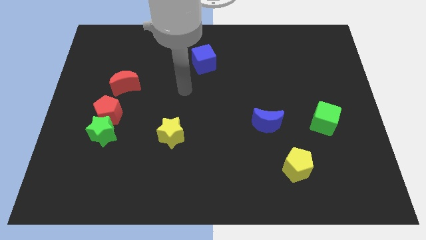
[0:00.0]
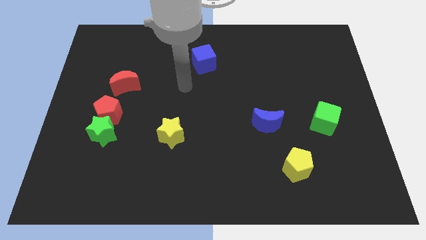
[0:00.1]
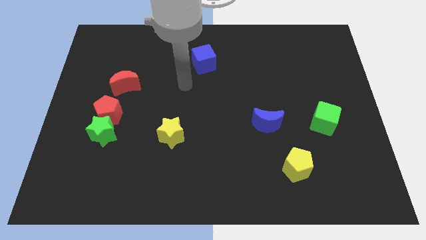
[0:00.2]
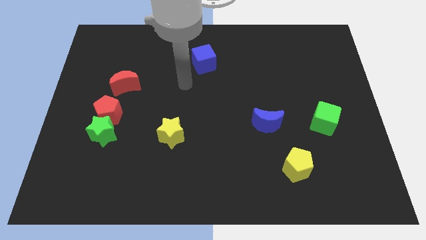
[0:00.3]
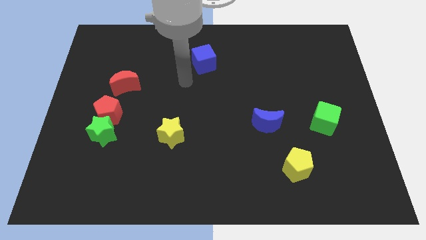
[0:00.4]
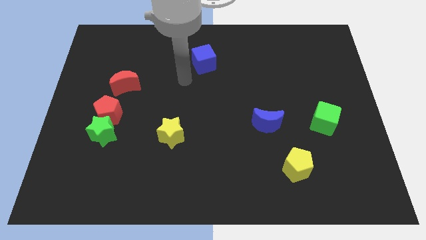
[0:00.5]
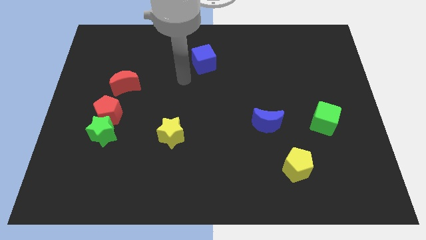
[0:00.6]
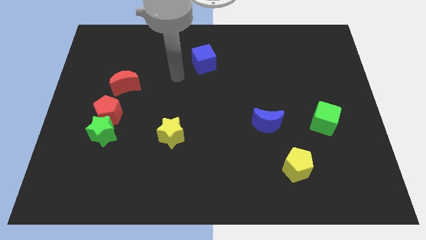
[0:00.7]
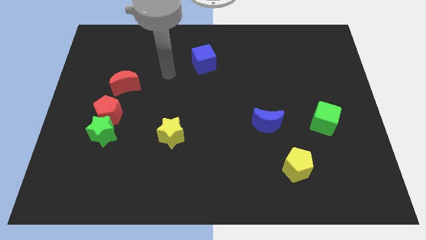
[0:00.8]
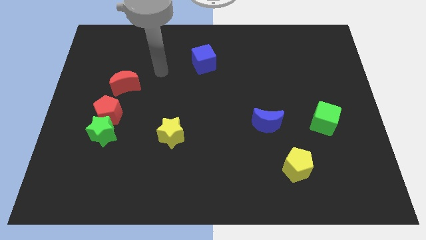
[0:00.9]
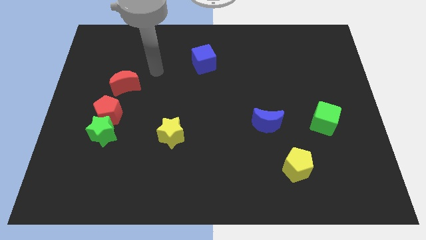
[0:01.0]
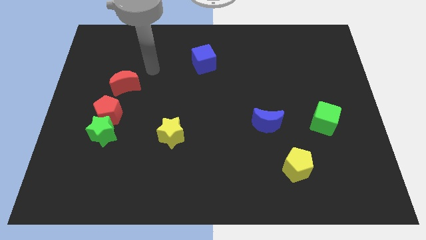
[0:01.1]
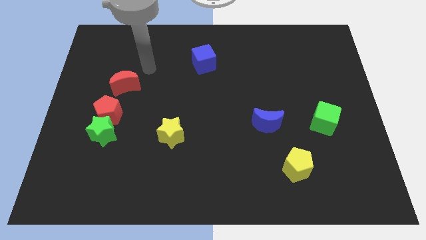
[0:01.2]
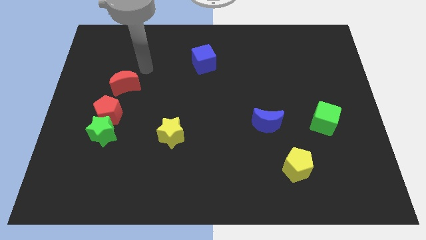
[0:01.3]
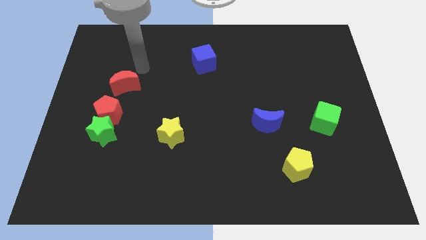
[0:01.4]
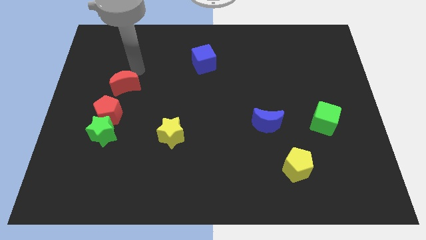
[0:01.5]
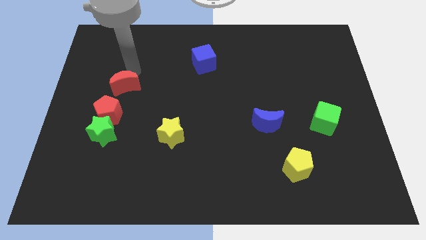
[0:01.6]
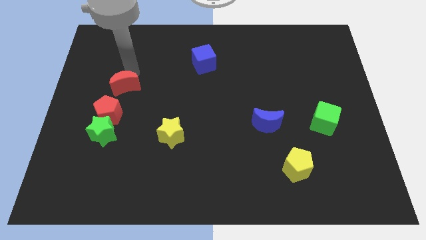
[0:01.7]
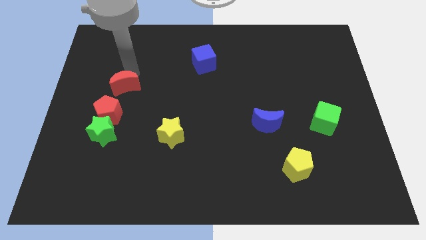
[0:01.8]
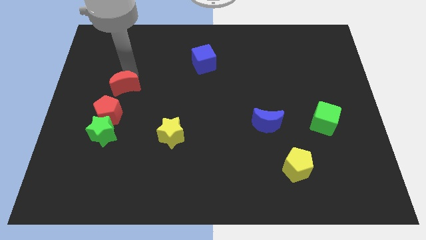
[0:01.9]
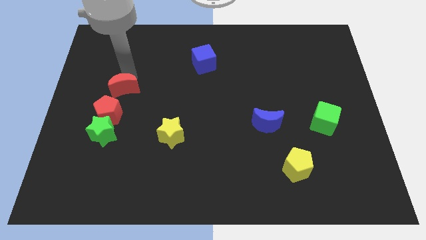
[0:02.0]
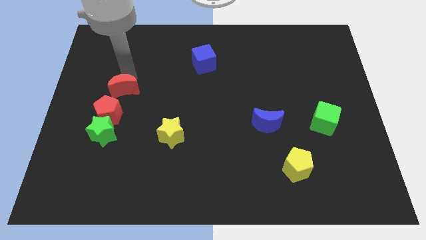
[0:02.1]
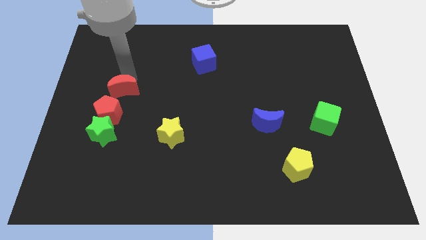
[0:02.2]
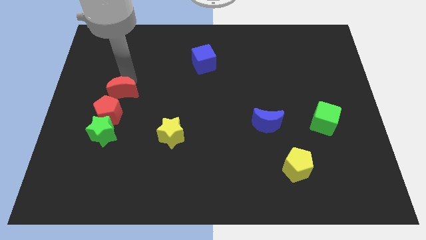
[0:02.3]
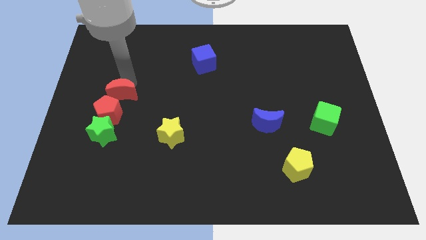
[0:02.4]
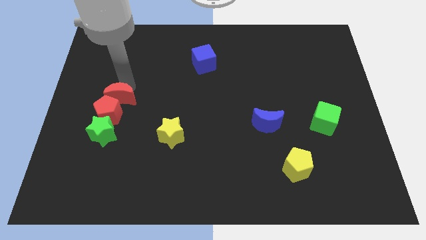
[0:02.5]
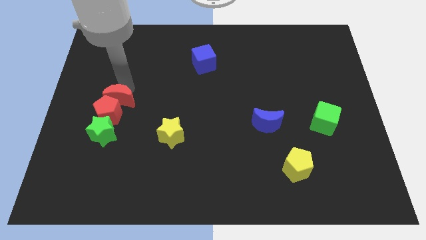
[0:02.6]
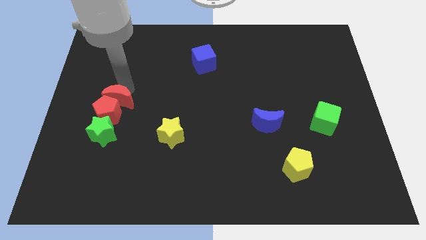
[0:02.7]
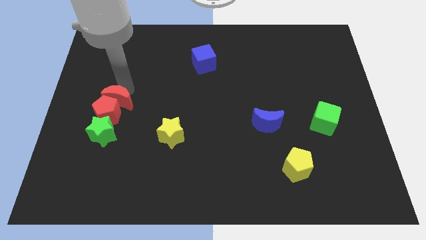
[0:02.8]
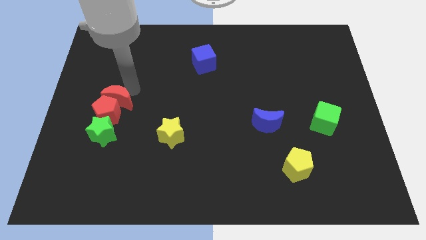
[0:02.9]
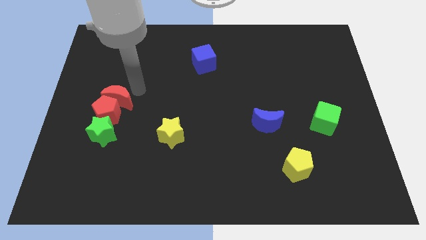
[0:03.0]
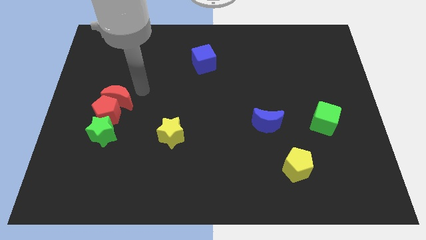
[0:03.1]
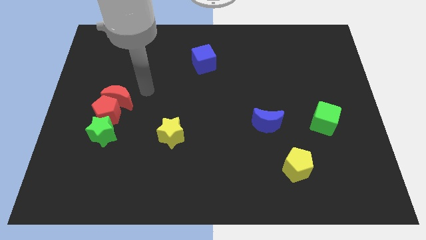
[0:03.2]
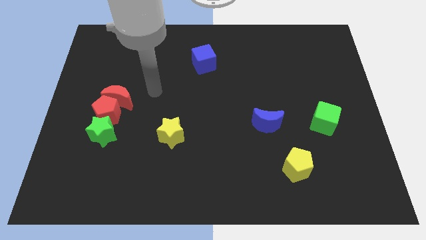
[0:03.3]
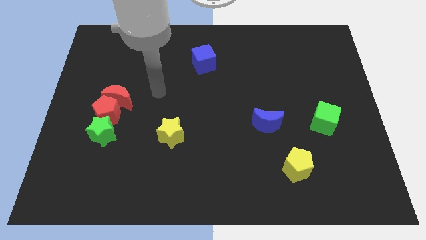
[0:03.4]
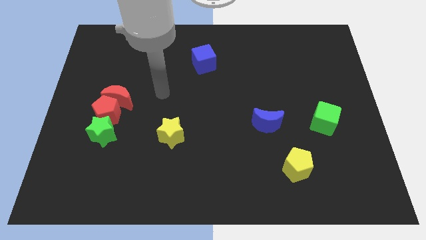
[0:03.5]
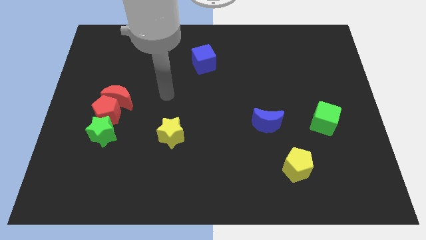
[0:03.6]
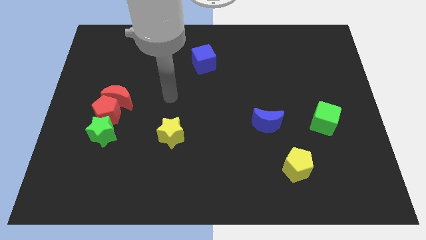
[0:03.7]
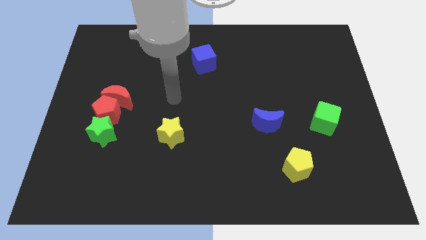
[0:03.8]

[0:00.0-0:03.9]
push the red moon into red pentagon

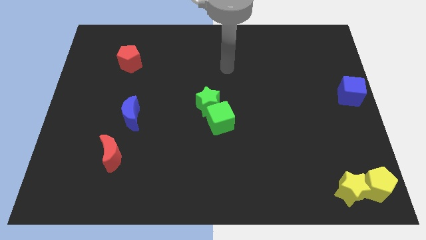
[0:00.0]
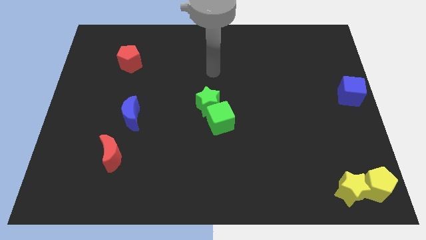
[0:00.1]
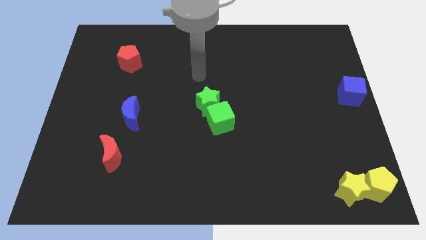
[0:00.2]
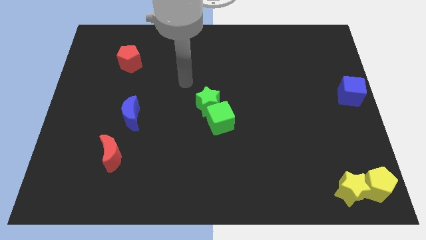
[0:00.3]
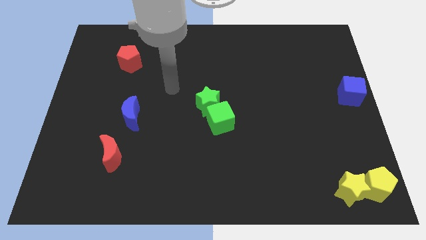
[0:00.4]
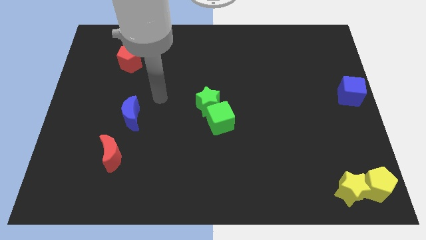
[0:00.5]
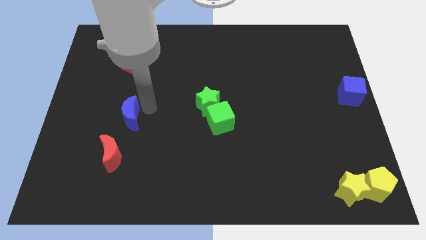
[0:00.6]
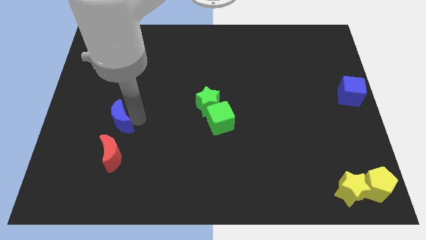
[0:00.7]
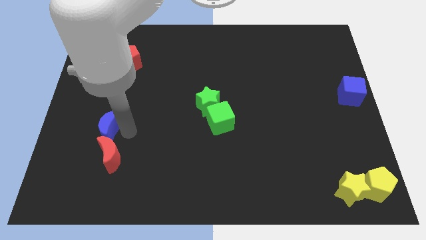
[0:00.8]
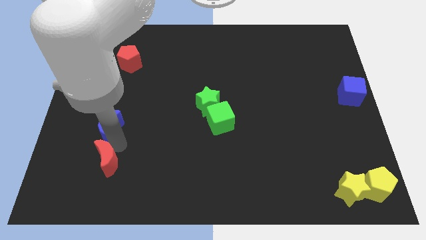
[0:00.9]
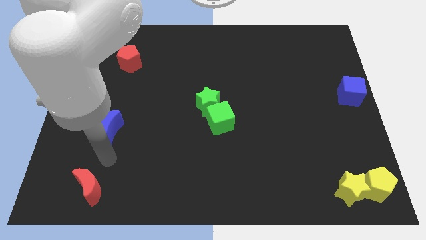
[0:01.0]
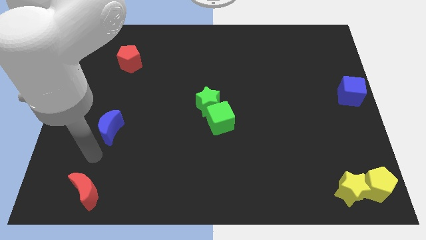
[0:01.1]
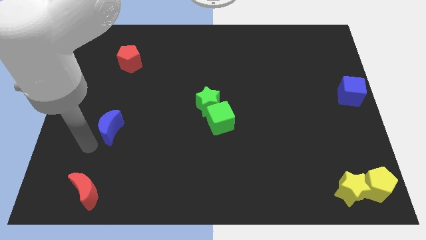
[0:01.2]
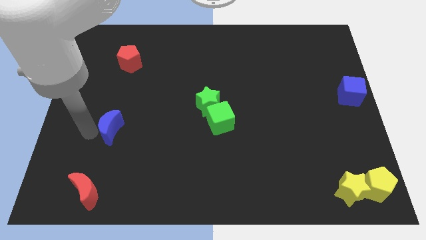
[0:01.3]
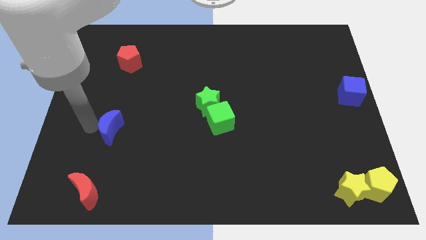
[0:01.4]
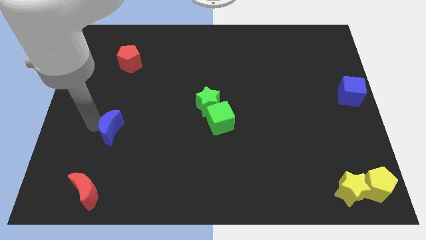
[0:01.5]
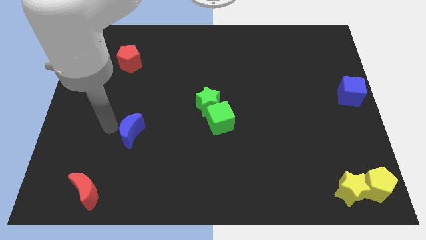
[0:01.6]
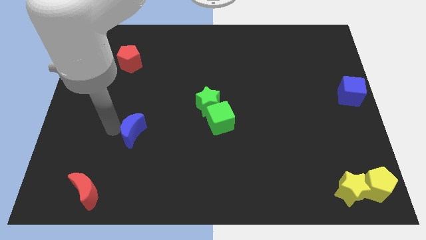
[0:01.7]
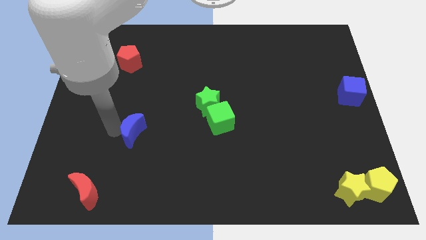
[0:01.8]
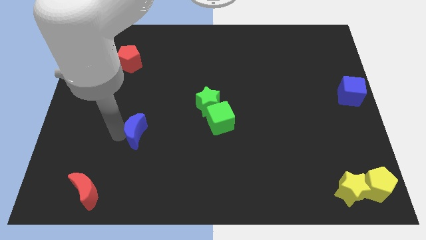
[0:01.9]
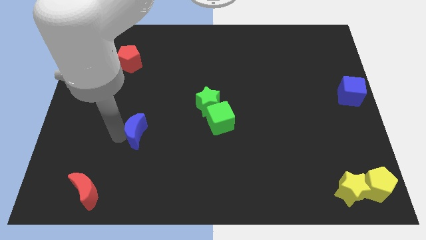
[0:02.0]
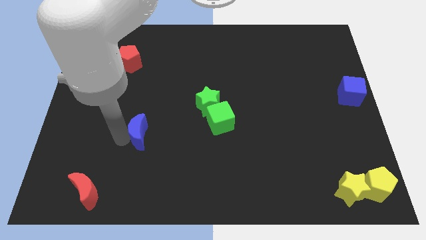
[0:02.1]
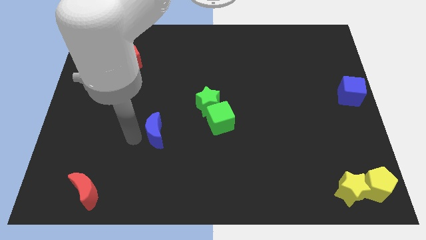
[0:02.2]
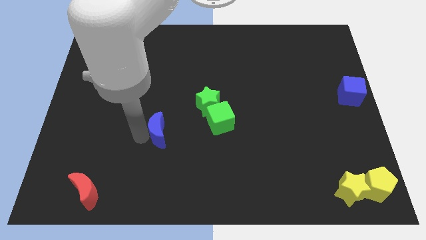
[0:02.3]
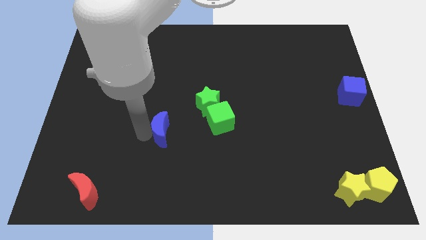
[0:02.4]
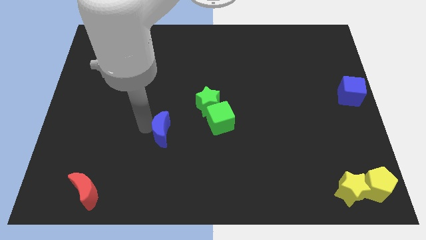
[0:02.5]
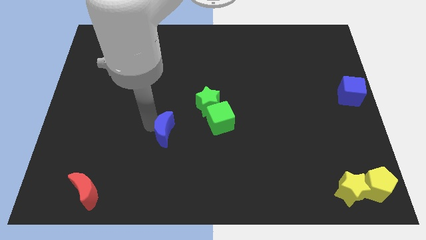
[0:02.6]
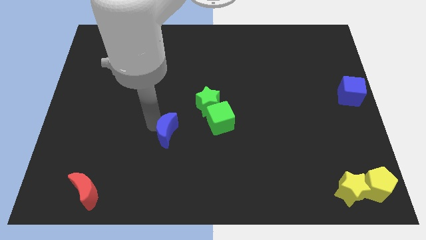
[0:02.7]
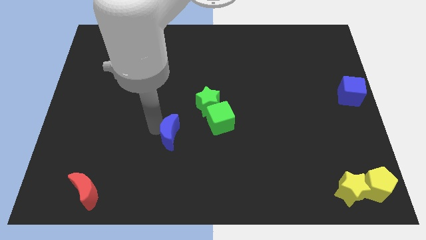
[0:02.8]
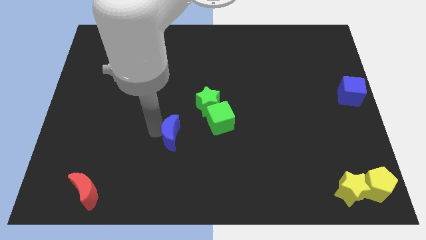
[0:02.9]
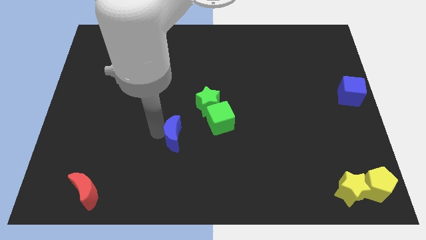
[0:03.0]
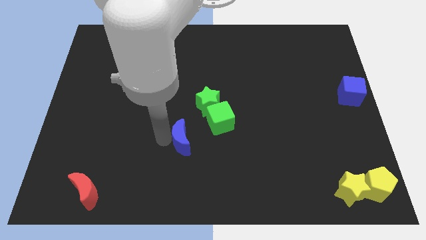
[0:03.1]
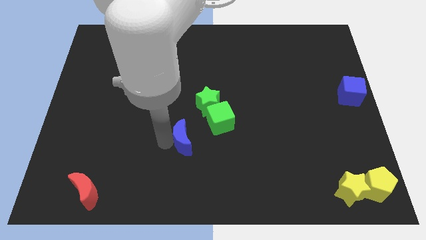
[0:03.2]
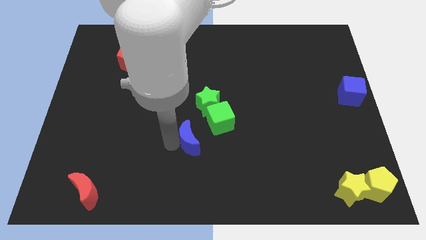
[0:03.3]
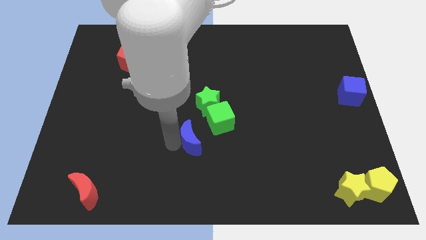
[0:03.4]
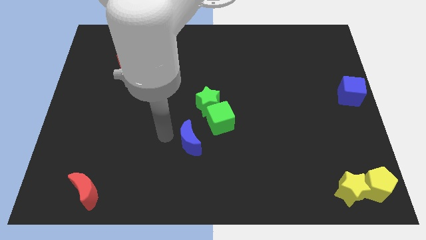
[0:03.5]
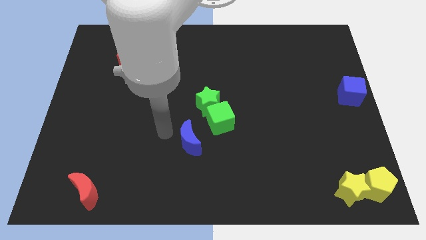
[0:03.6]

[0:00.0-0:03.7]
separate the blue moon from the red moon

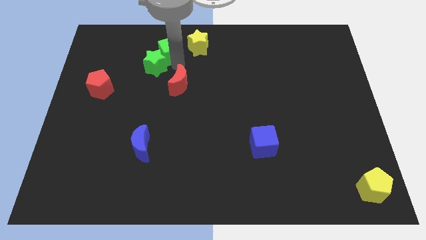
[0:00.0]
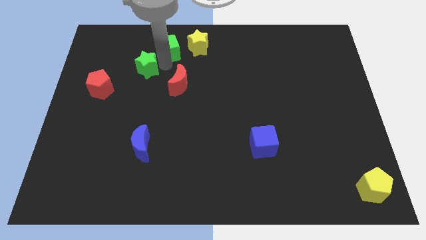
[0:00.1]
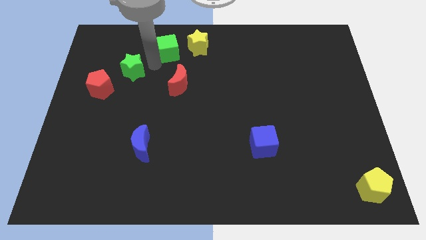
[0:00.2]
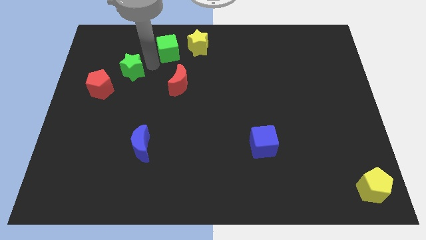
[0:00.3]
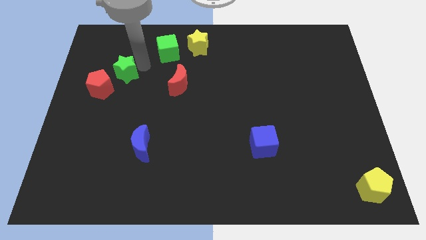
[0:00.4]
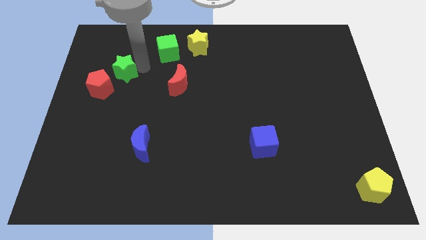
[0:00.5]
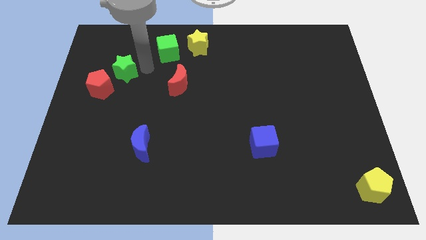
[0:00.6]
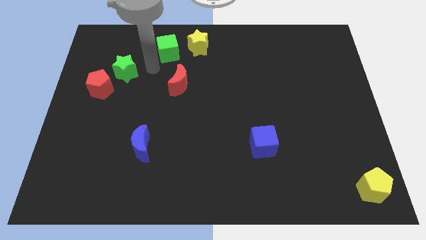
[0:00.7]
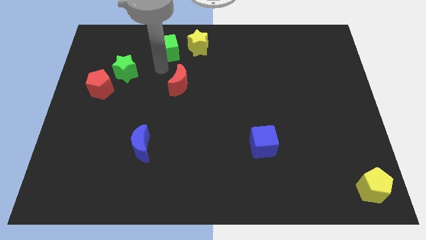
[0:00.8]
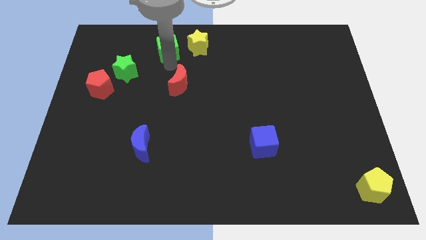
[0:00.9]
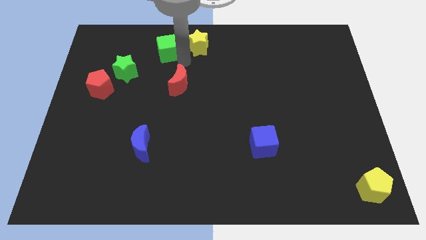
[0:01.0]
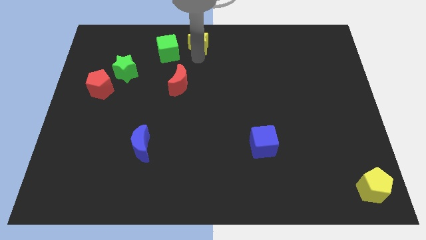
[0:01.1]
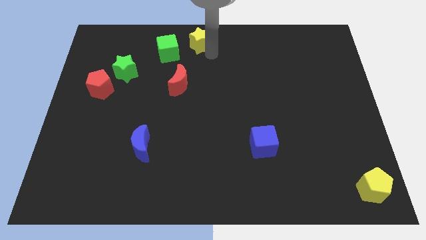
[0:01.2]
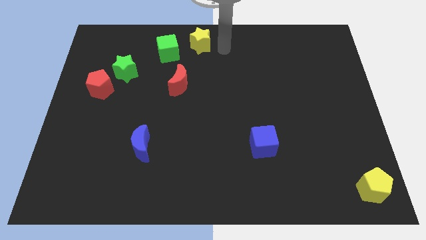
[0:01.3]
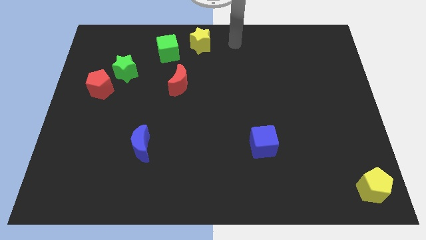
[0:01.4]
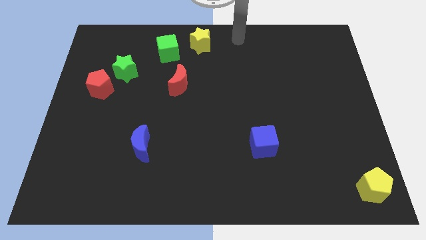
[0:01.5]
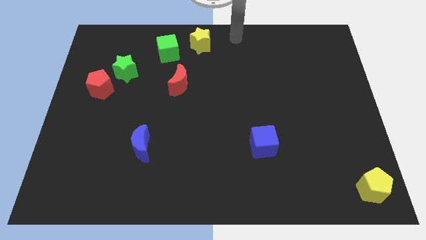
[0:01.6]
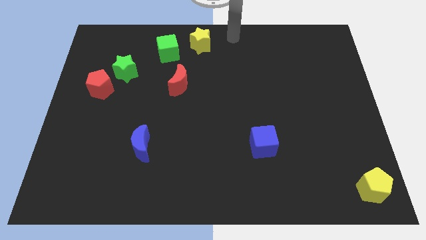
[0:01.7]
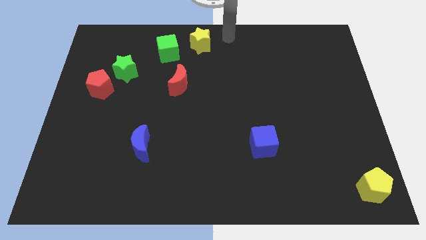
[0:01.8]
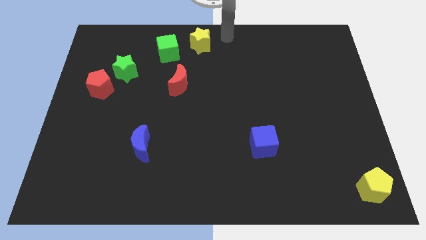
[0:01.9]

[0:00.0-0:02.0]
separate the green star and green cube
